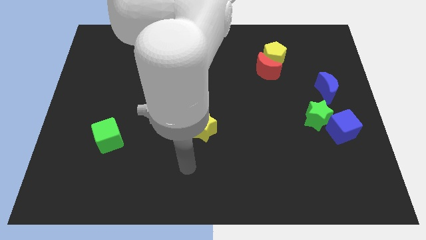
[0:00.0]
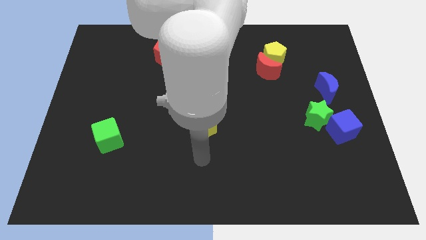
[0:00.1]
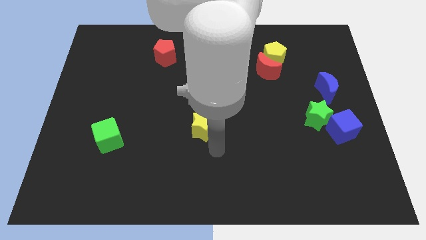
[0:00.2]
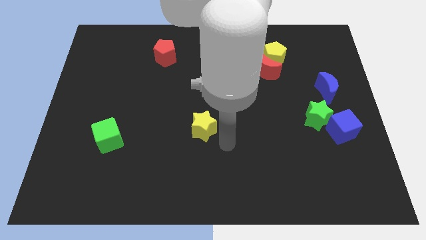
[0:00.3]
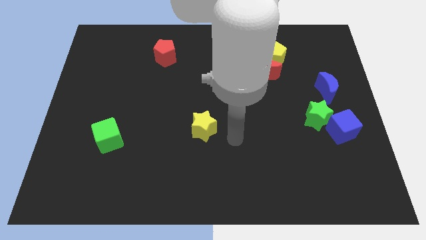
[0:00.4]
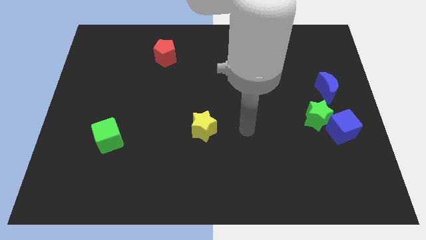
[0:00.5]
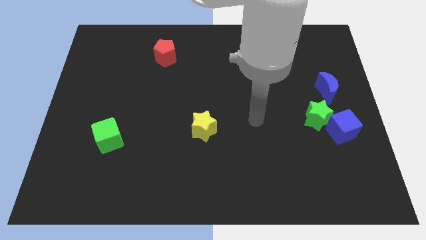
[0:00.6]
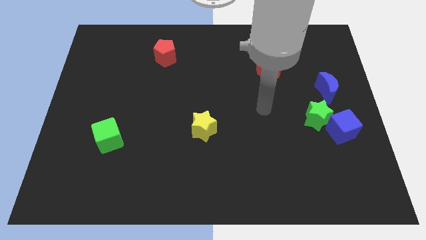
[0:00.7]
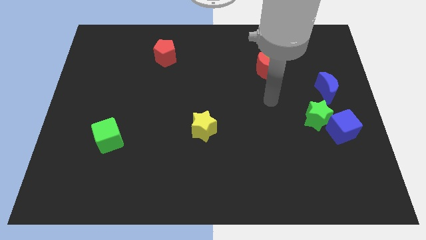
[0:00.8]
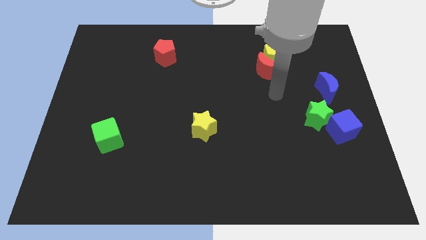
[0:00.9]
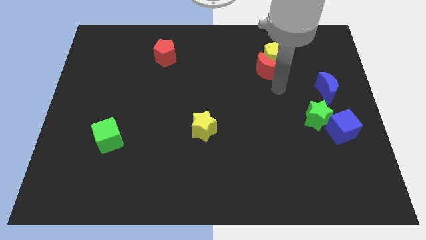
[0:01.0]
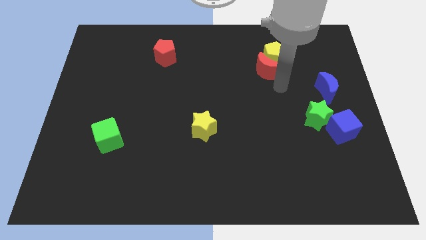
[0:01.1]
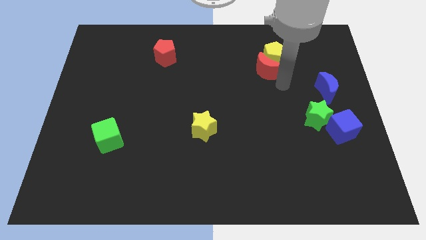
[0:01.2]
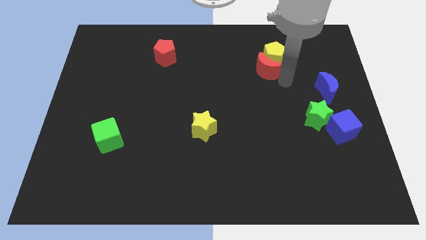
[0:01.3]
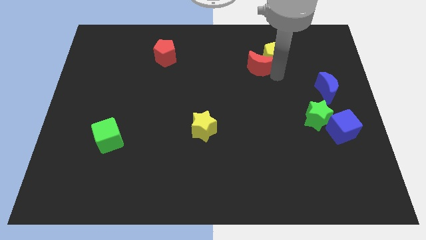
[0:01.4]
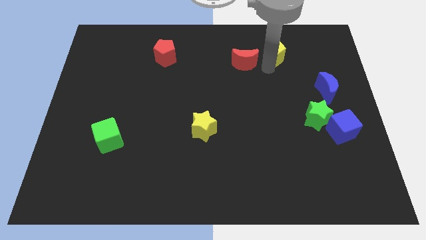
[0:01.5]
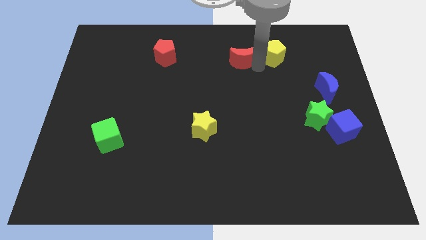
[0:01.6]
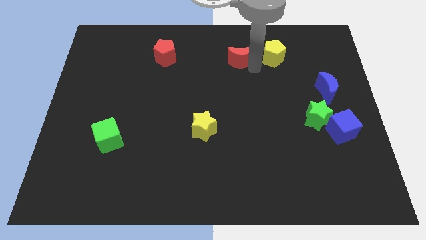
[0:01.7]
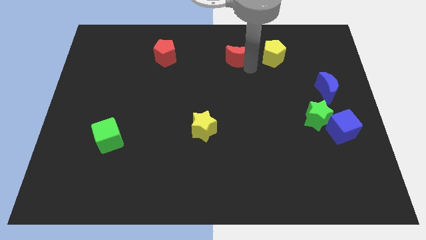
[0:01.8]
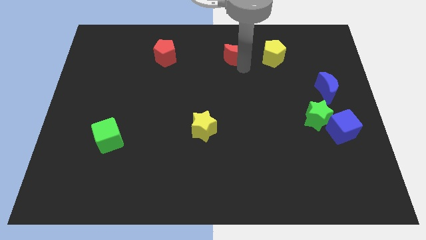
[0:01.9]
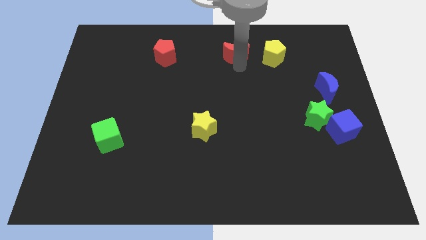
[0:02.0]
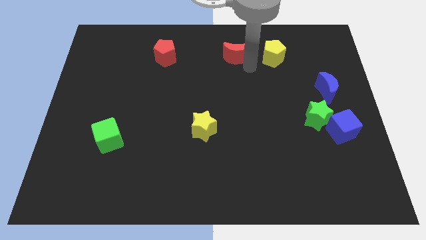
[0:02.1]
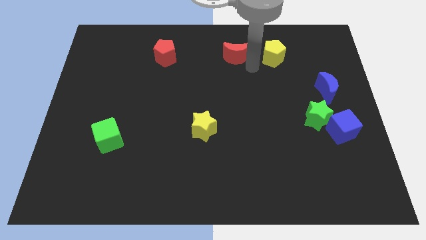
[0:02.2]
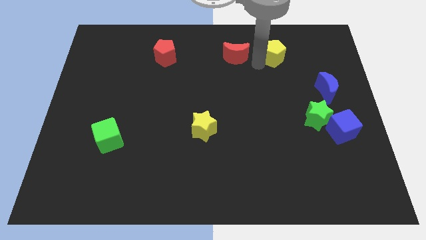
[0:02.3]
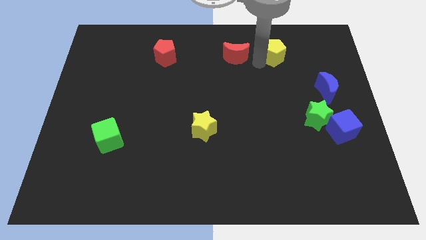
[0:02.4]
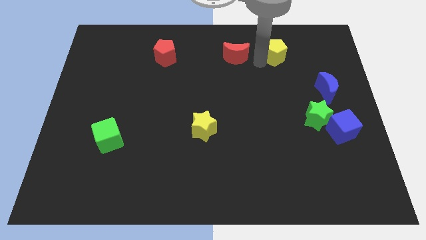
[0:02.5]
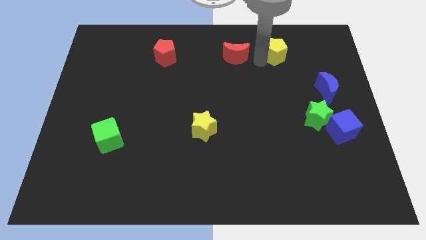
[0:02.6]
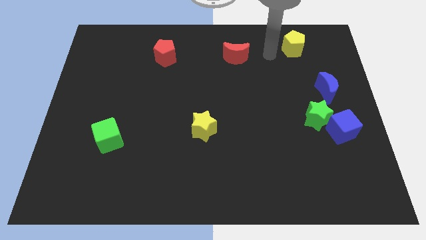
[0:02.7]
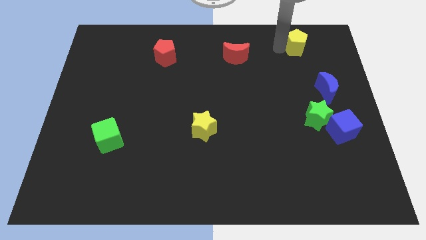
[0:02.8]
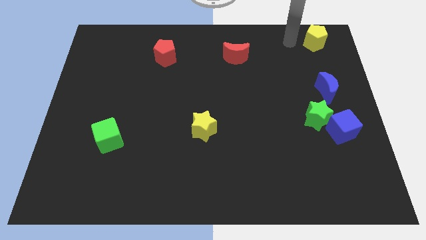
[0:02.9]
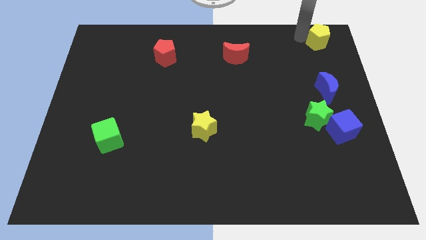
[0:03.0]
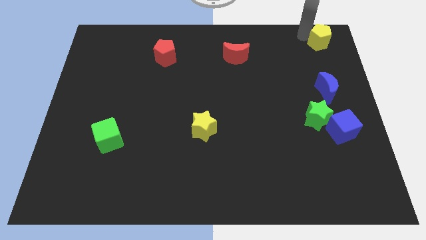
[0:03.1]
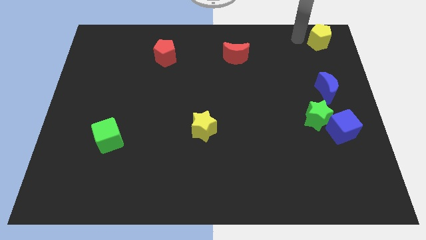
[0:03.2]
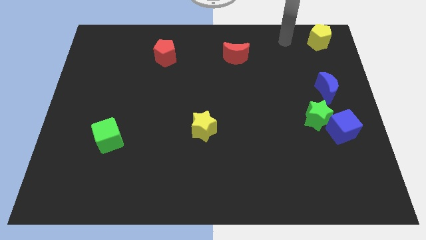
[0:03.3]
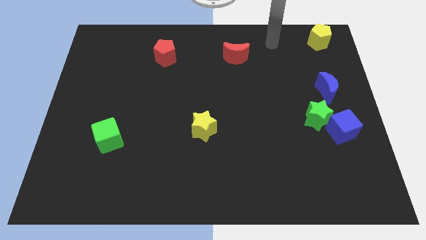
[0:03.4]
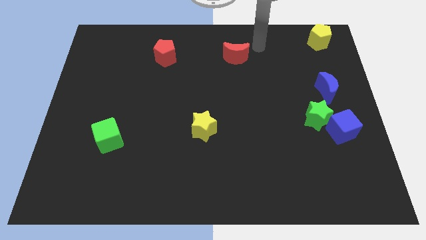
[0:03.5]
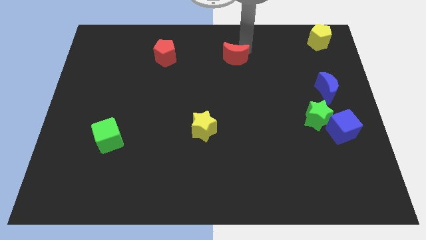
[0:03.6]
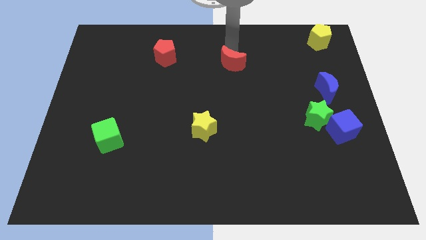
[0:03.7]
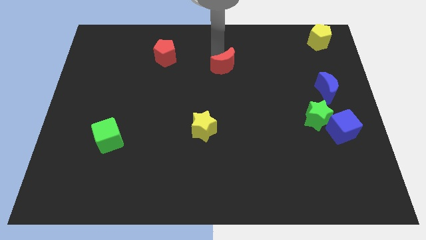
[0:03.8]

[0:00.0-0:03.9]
separate the red crescent and the yellow pentagon

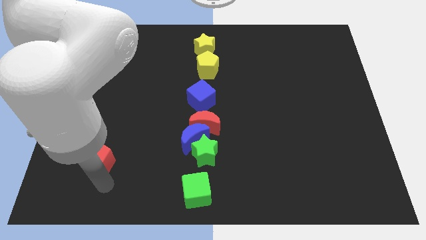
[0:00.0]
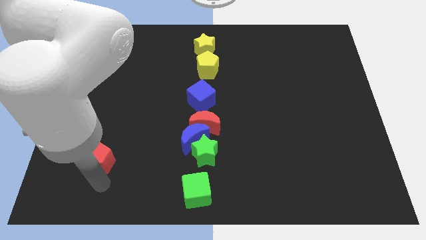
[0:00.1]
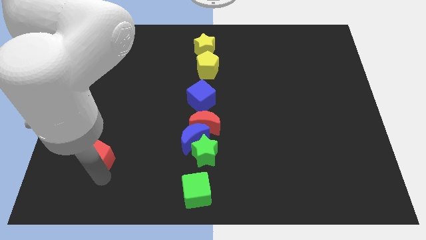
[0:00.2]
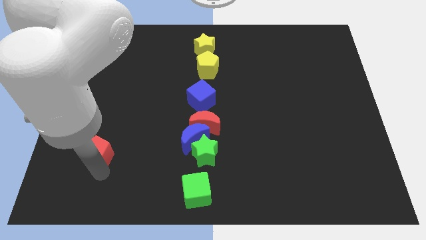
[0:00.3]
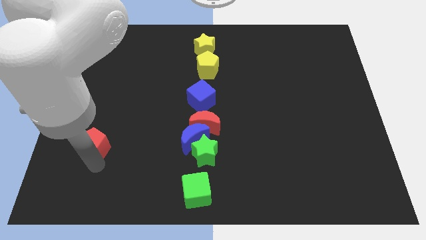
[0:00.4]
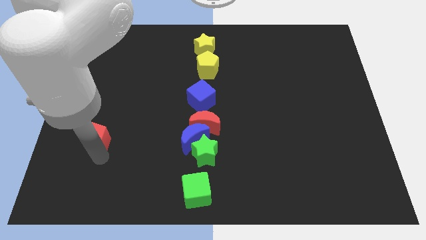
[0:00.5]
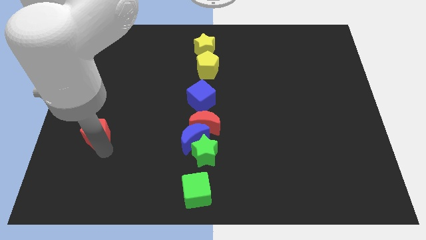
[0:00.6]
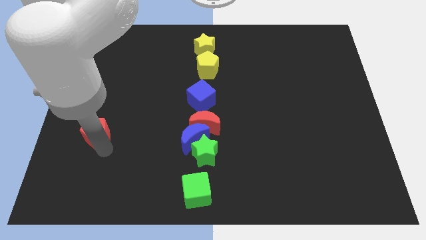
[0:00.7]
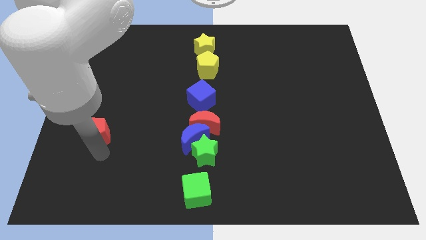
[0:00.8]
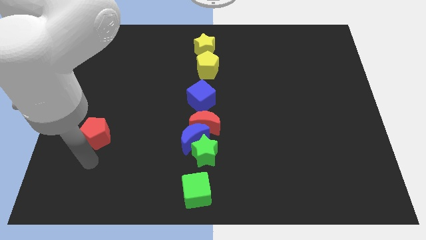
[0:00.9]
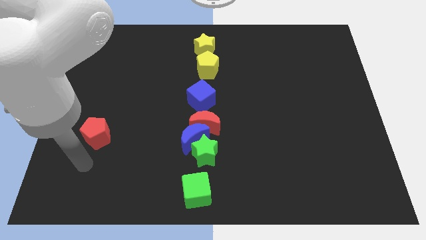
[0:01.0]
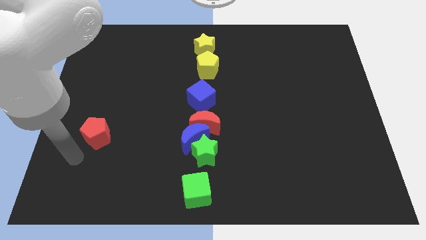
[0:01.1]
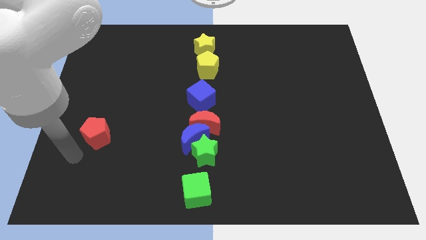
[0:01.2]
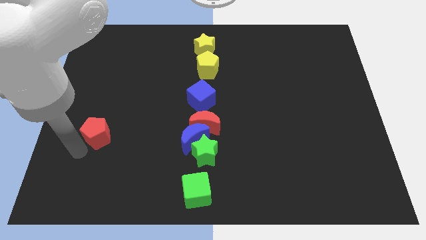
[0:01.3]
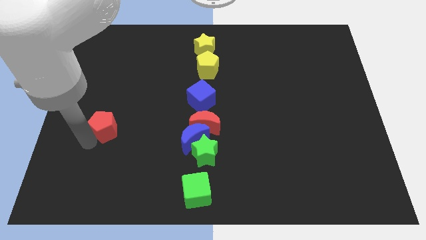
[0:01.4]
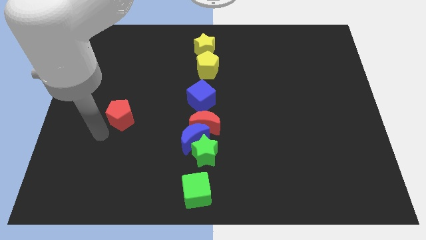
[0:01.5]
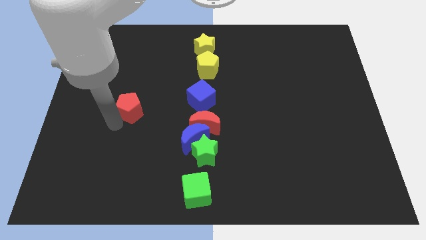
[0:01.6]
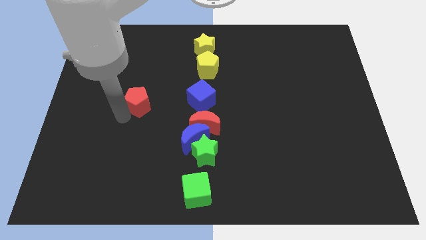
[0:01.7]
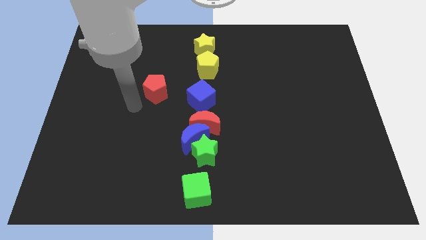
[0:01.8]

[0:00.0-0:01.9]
push the red pentagon left parallel to the blue cube

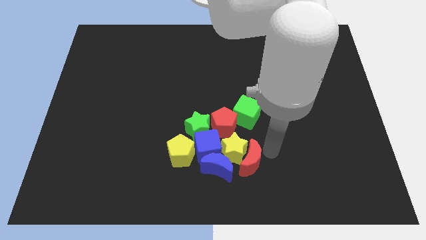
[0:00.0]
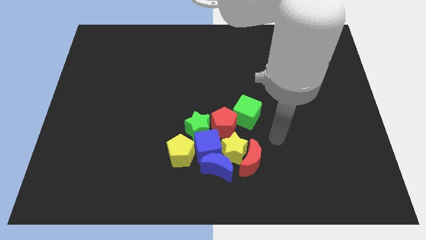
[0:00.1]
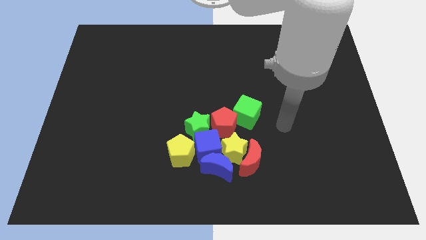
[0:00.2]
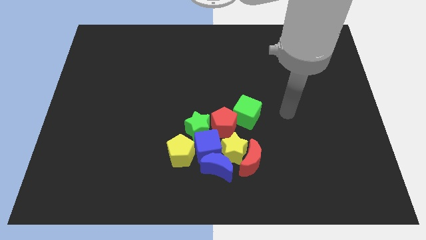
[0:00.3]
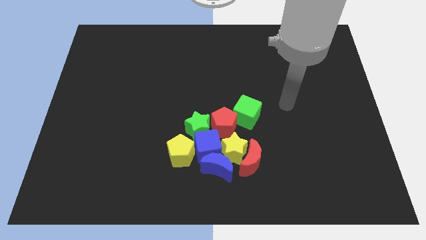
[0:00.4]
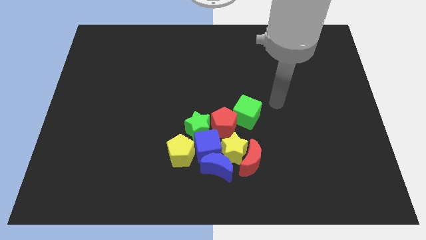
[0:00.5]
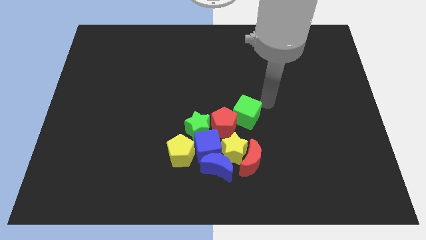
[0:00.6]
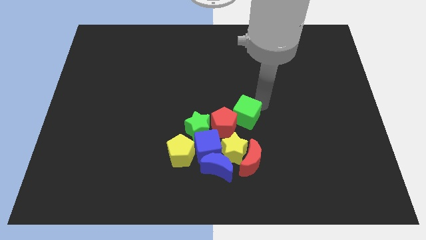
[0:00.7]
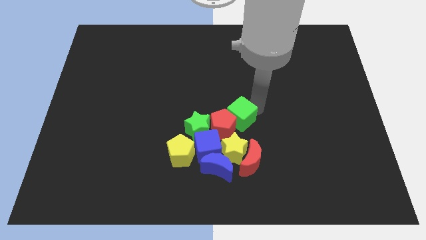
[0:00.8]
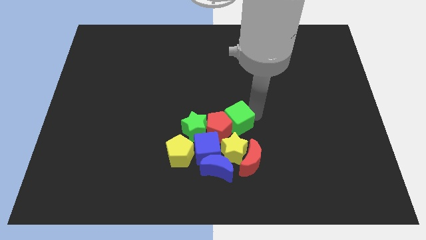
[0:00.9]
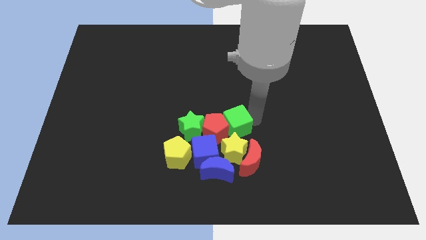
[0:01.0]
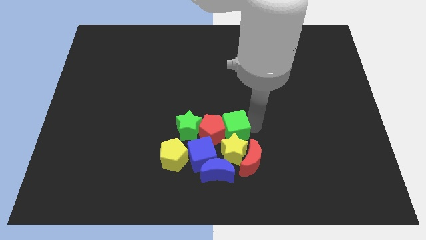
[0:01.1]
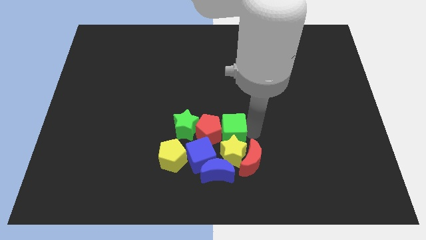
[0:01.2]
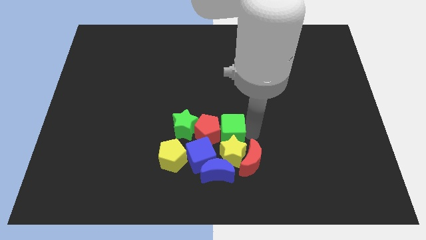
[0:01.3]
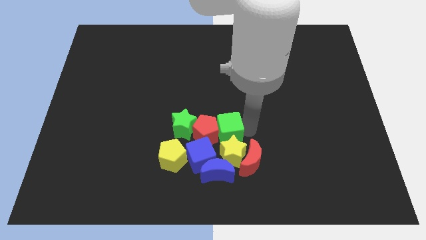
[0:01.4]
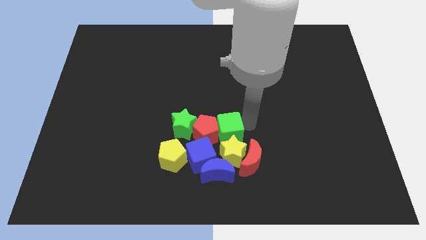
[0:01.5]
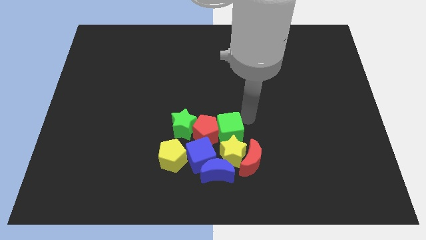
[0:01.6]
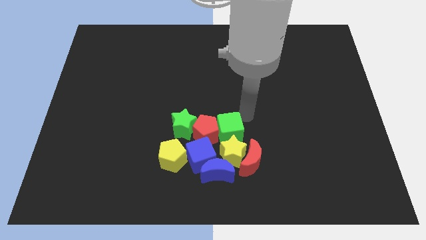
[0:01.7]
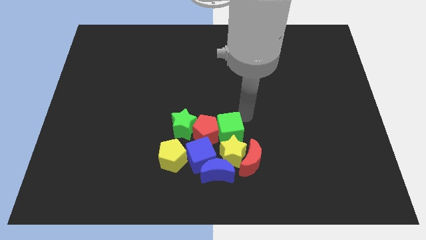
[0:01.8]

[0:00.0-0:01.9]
push the green cube into the yellow star

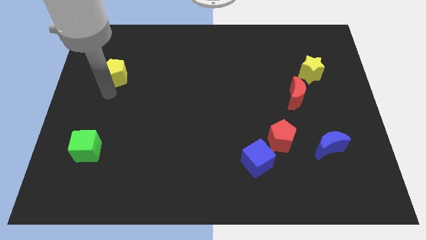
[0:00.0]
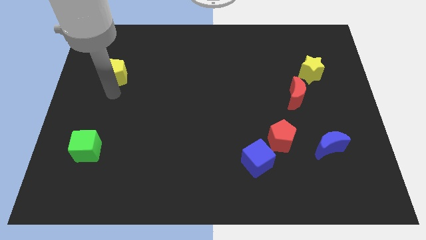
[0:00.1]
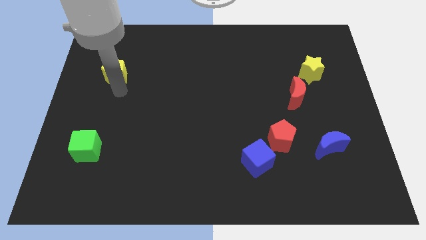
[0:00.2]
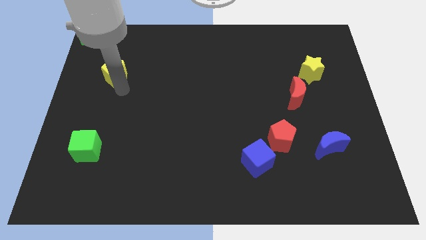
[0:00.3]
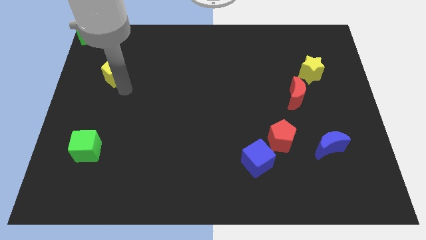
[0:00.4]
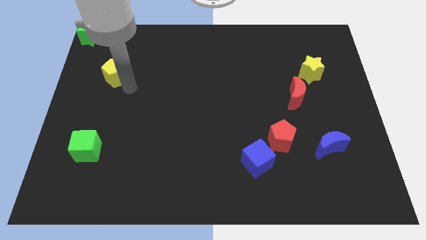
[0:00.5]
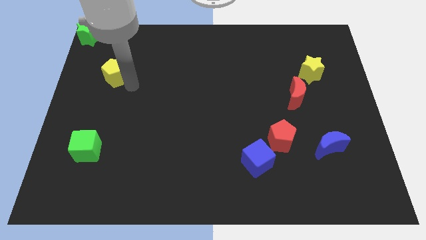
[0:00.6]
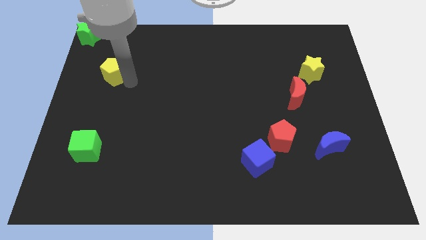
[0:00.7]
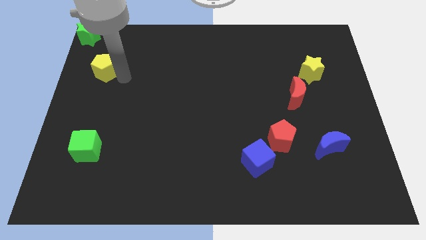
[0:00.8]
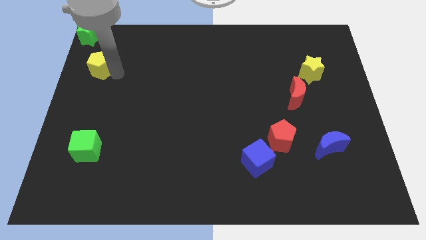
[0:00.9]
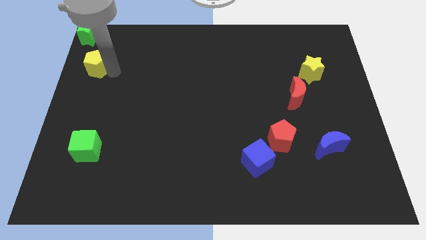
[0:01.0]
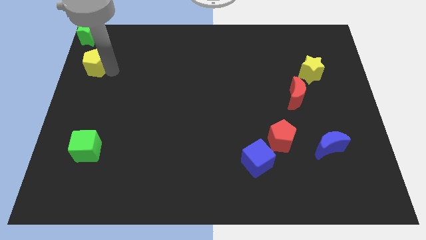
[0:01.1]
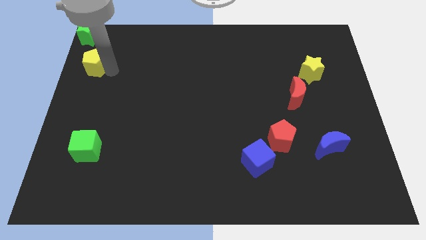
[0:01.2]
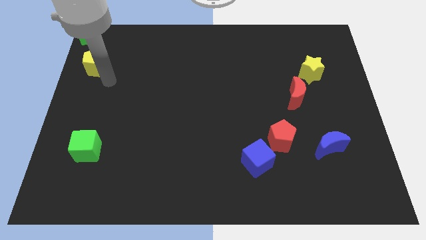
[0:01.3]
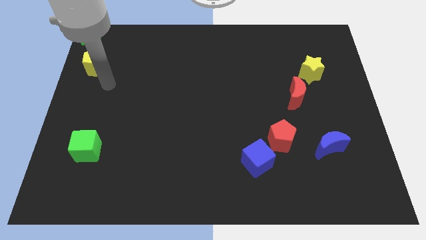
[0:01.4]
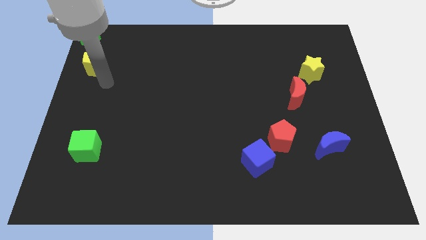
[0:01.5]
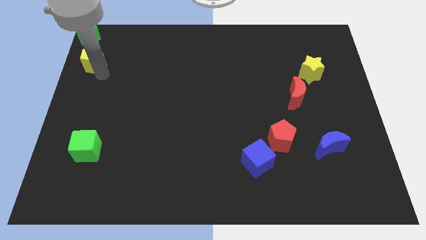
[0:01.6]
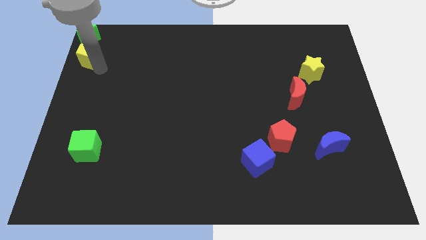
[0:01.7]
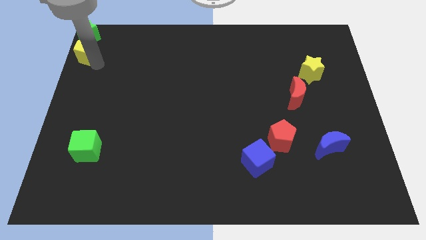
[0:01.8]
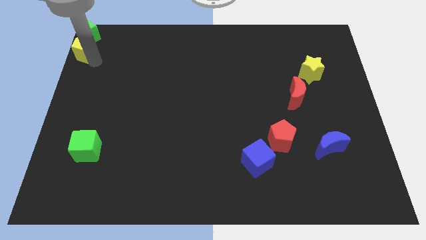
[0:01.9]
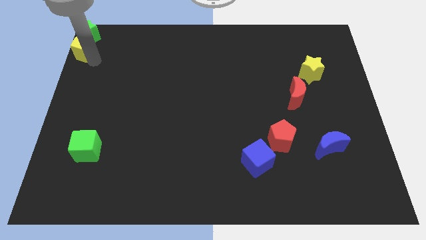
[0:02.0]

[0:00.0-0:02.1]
place the yellow pentagon to the bottom of the green star
